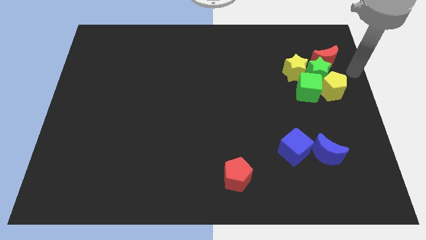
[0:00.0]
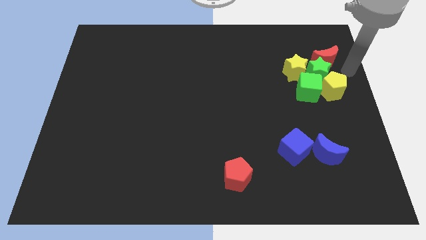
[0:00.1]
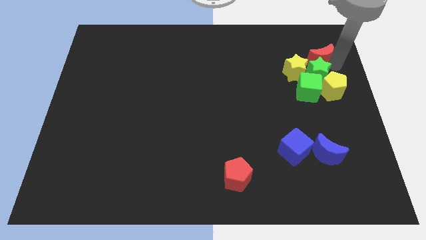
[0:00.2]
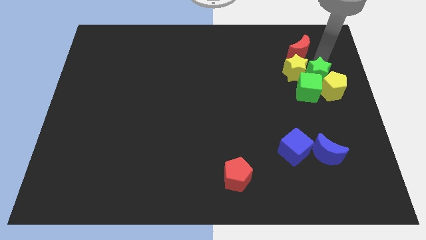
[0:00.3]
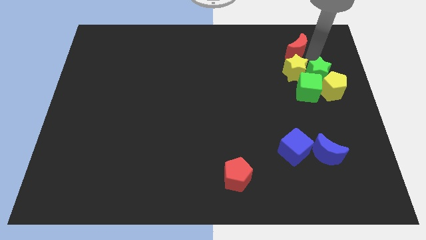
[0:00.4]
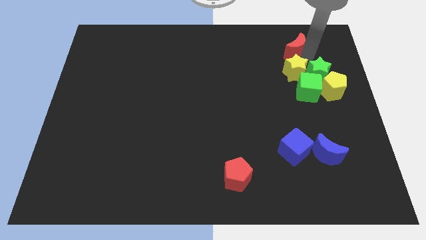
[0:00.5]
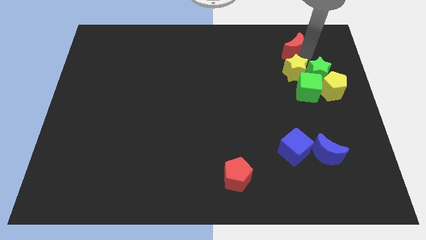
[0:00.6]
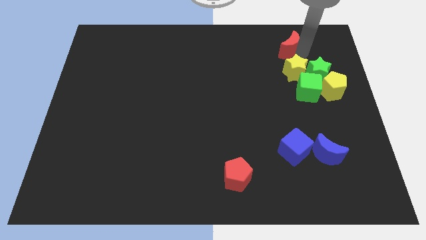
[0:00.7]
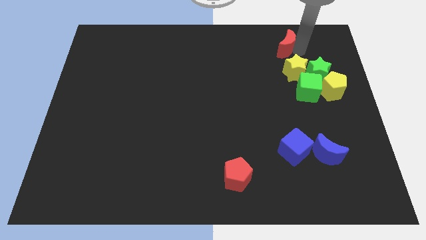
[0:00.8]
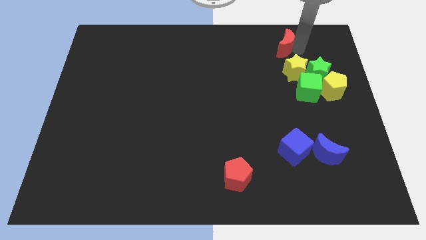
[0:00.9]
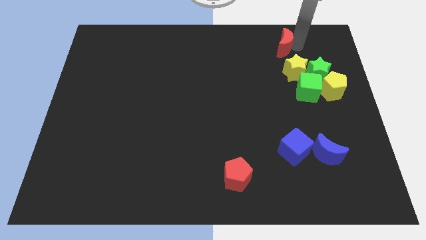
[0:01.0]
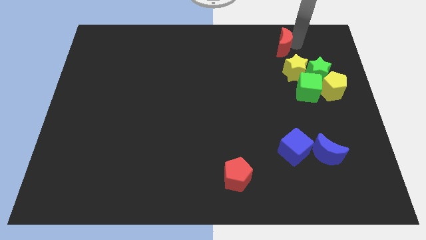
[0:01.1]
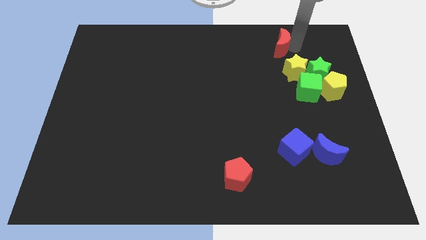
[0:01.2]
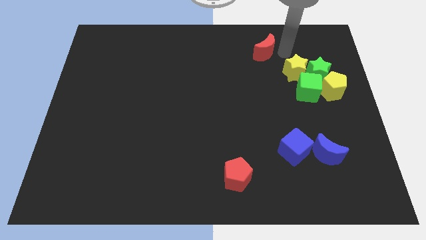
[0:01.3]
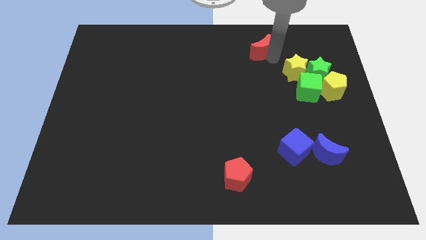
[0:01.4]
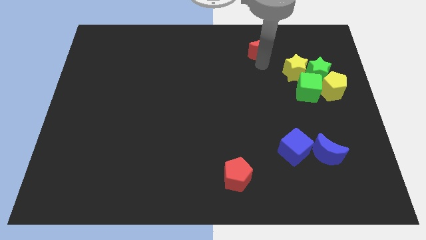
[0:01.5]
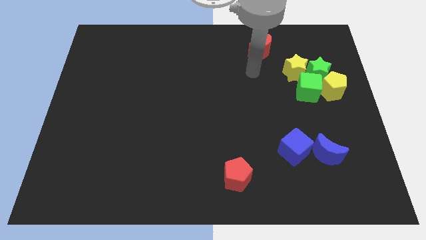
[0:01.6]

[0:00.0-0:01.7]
slide the red crescent away from the green star

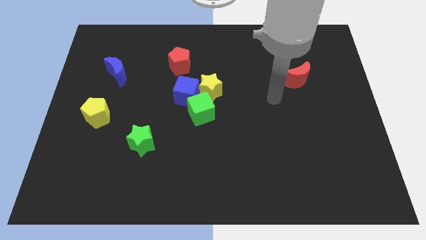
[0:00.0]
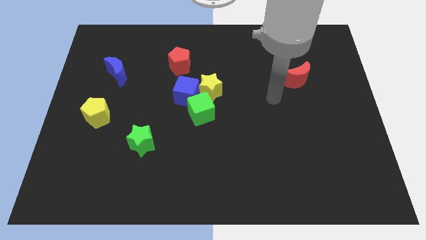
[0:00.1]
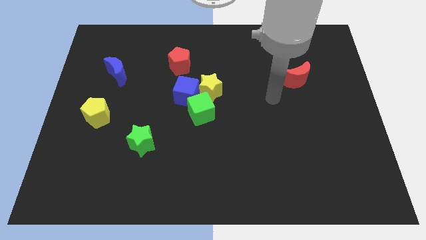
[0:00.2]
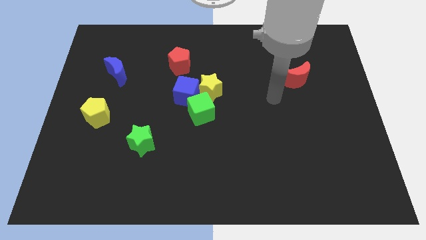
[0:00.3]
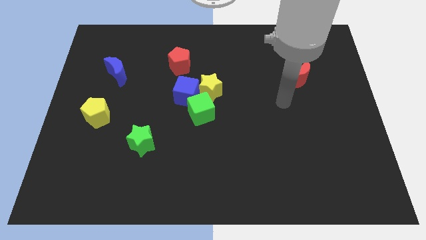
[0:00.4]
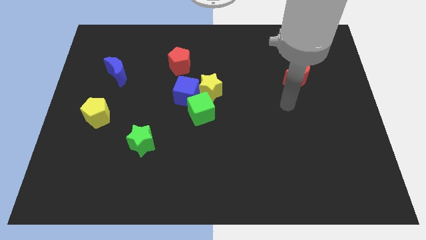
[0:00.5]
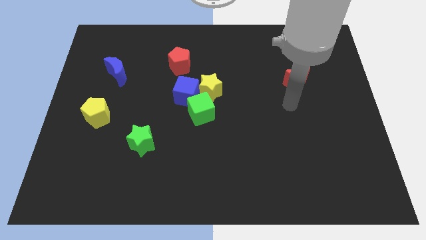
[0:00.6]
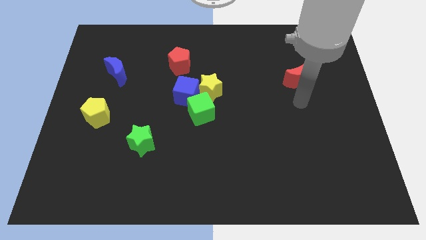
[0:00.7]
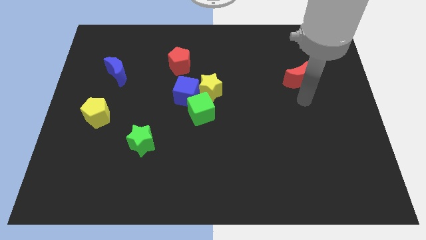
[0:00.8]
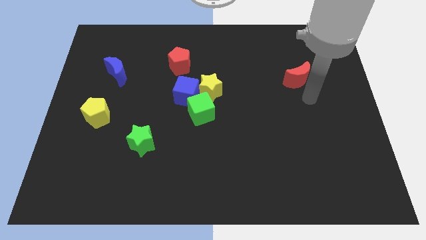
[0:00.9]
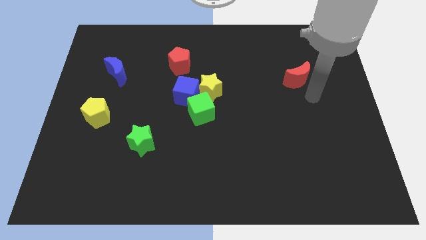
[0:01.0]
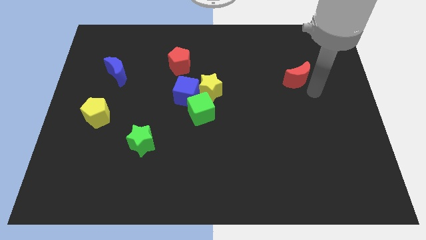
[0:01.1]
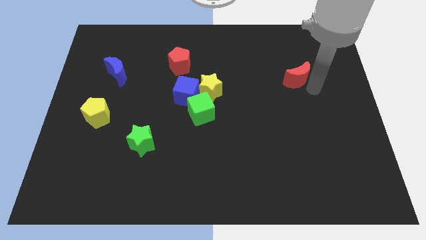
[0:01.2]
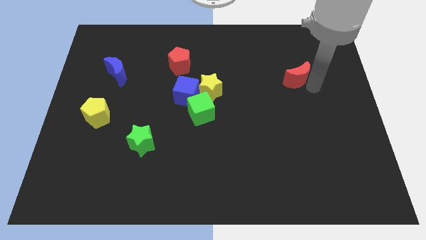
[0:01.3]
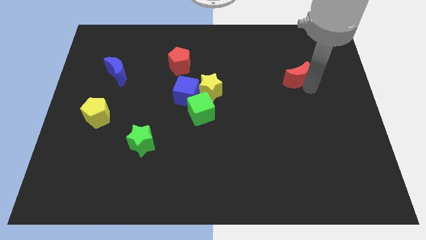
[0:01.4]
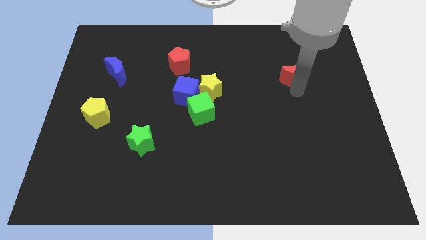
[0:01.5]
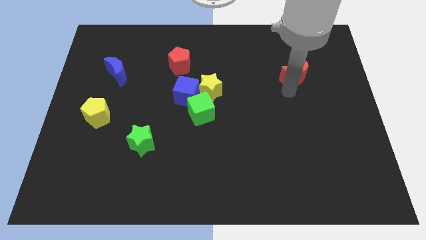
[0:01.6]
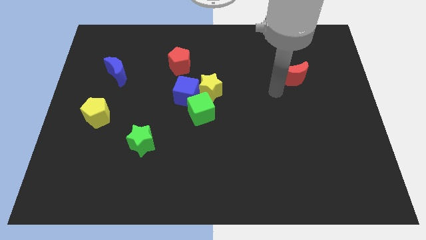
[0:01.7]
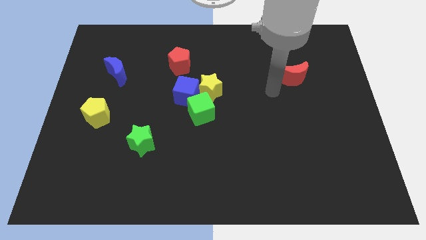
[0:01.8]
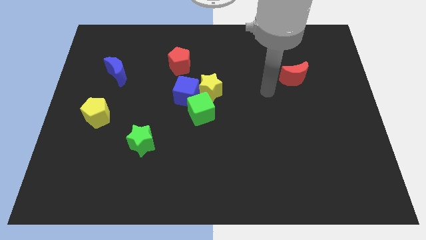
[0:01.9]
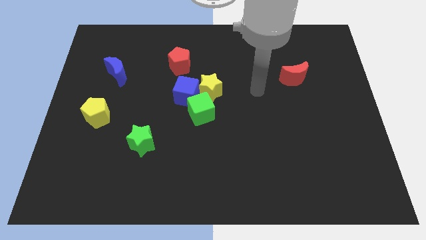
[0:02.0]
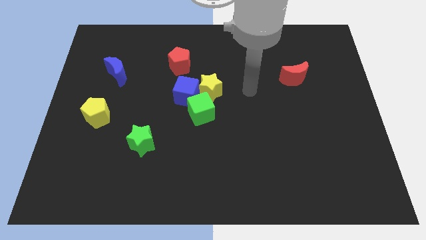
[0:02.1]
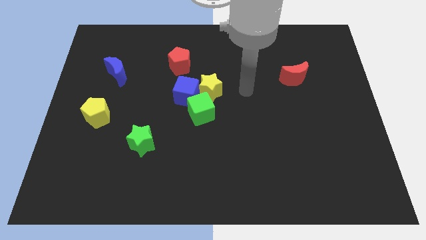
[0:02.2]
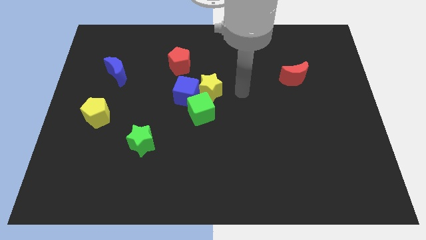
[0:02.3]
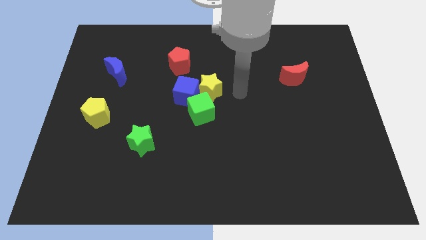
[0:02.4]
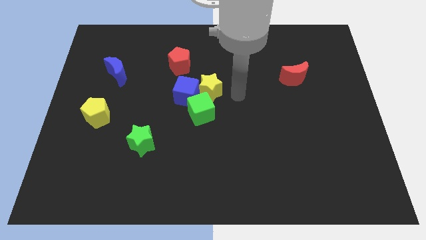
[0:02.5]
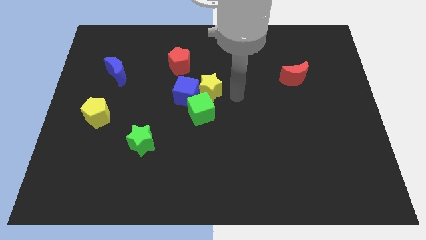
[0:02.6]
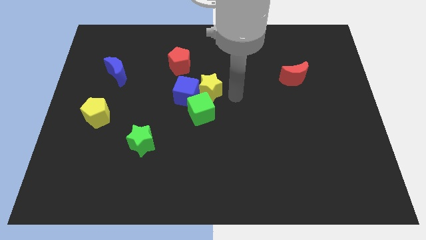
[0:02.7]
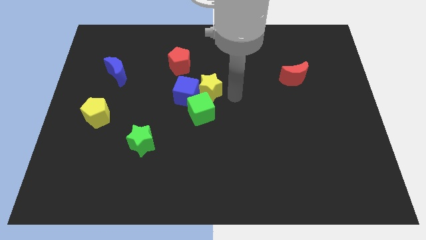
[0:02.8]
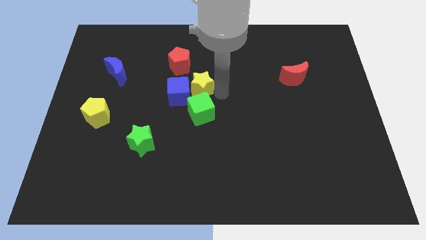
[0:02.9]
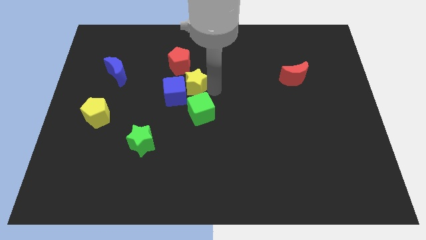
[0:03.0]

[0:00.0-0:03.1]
point your arm towards the bottom right side of the yellow star

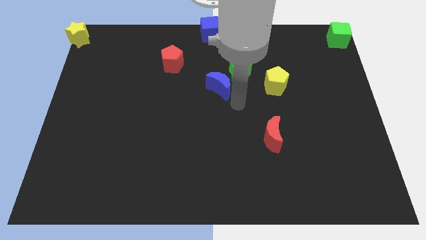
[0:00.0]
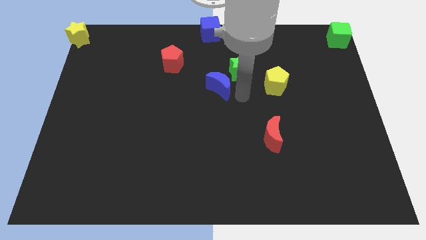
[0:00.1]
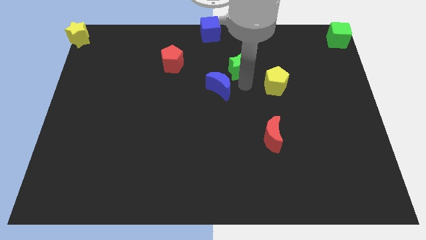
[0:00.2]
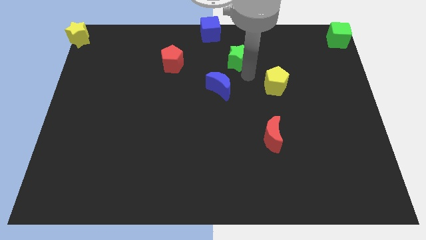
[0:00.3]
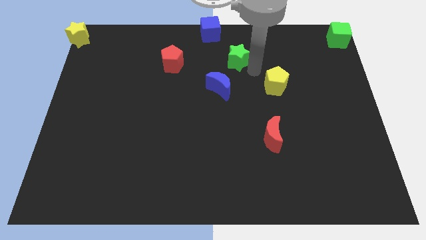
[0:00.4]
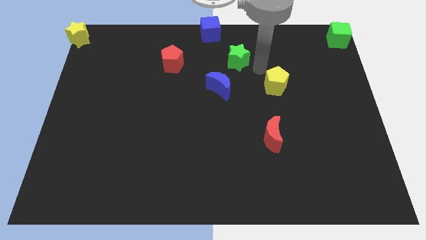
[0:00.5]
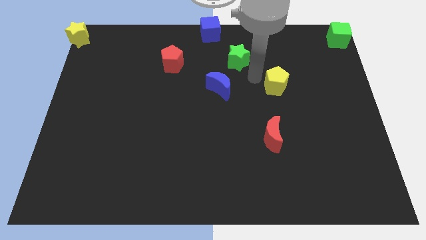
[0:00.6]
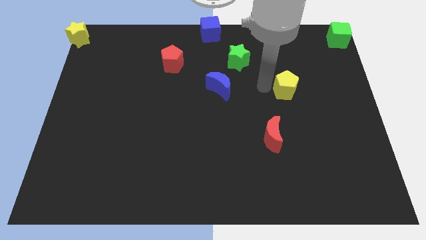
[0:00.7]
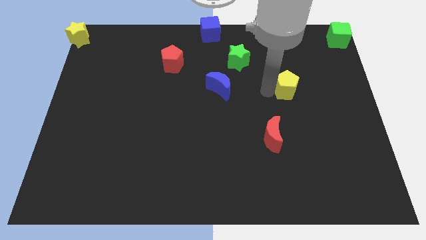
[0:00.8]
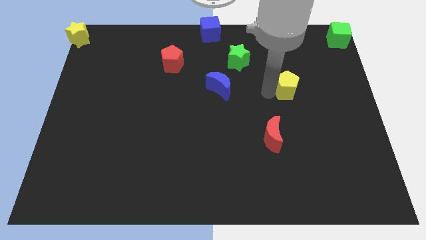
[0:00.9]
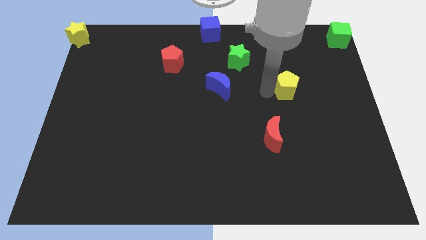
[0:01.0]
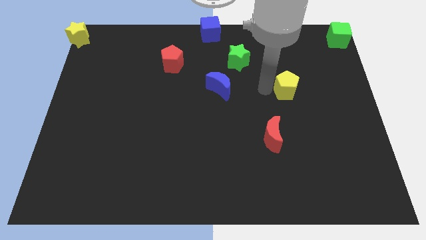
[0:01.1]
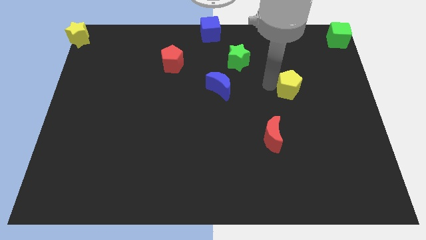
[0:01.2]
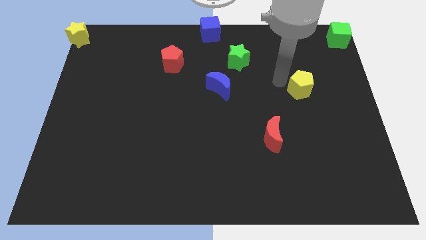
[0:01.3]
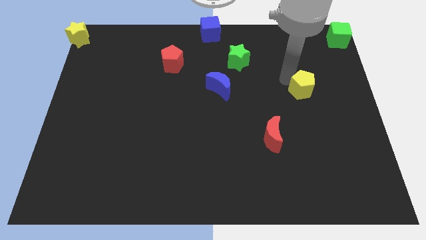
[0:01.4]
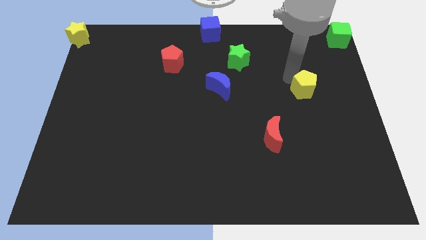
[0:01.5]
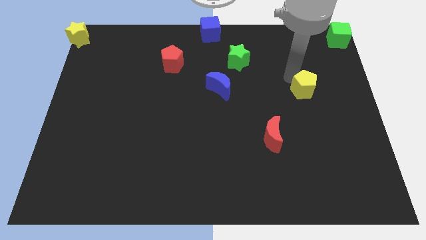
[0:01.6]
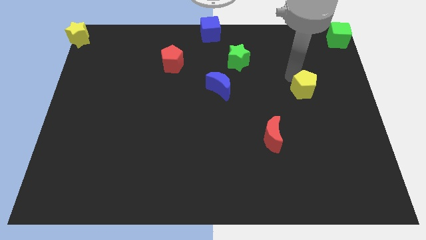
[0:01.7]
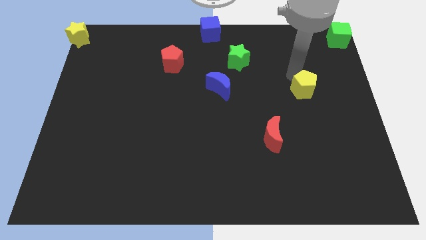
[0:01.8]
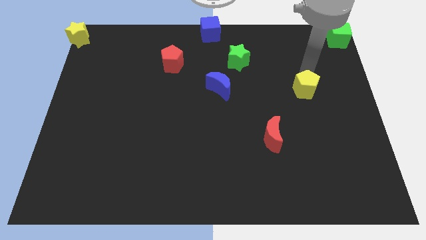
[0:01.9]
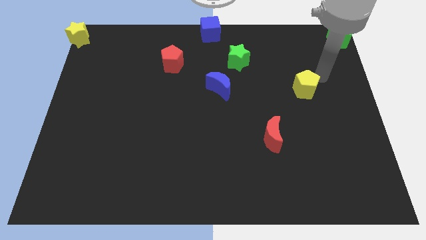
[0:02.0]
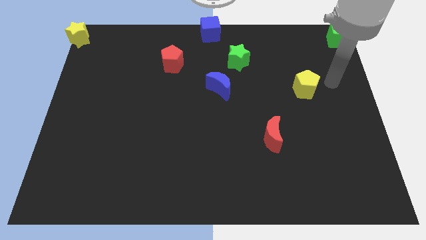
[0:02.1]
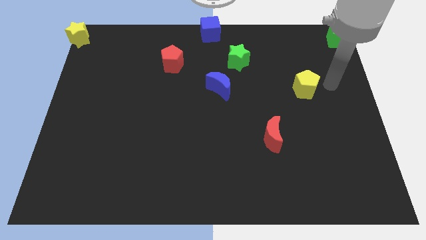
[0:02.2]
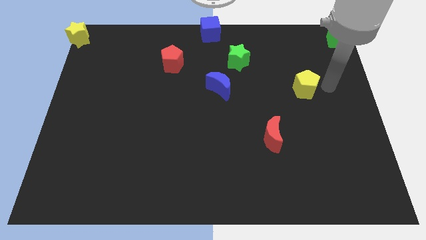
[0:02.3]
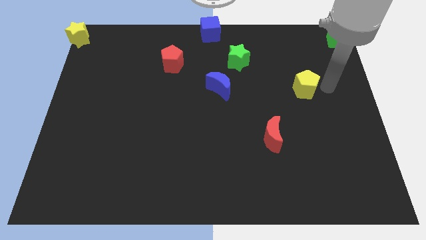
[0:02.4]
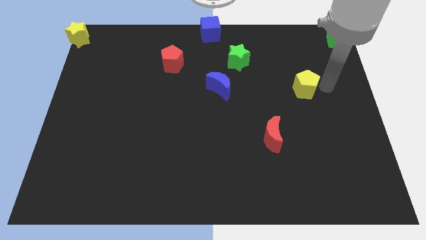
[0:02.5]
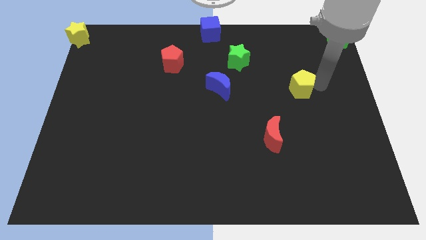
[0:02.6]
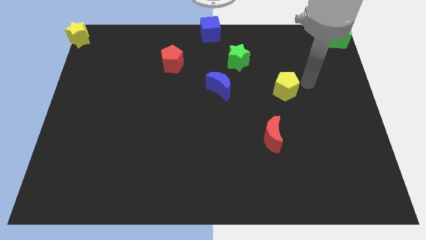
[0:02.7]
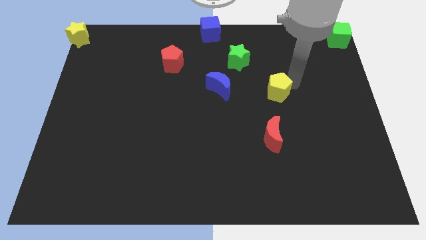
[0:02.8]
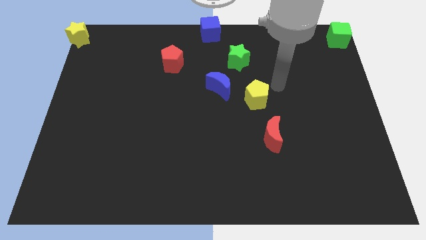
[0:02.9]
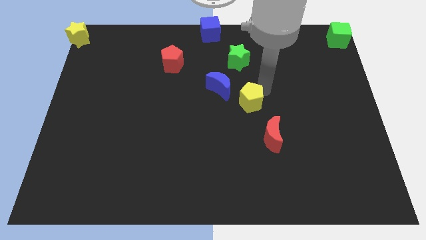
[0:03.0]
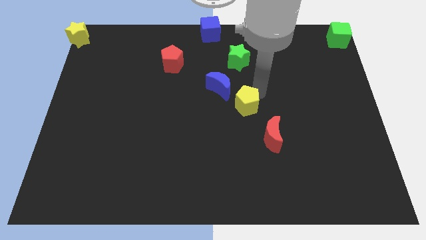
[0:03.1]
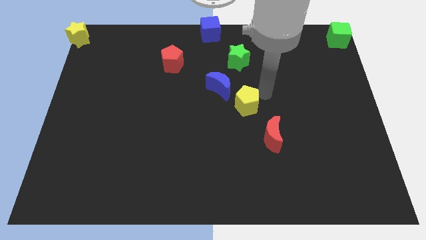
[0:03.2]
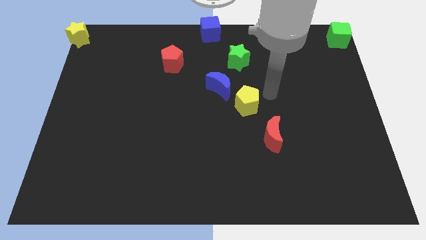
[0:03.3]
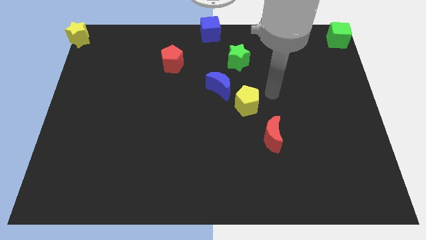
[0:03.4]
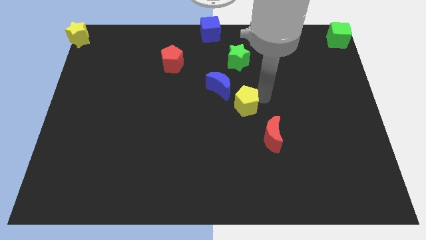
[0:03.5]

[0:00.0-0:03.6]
move th yellow pentagon diagonal above the red moon

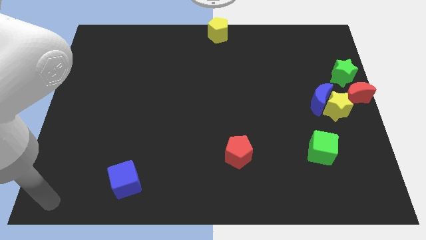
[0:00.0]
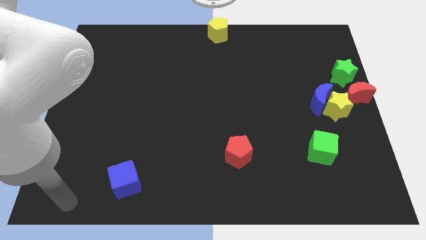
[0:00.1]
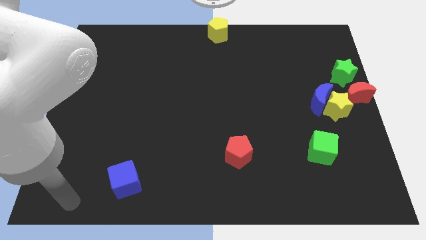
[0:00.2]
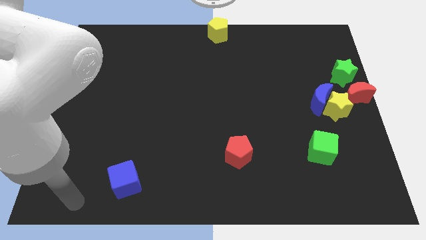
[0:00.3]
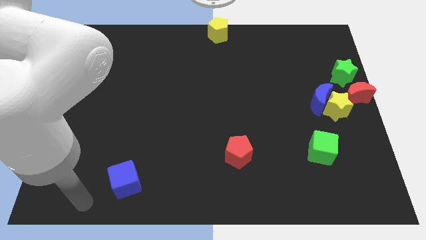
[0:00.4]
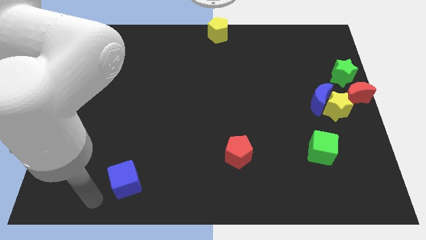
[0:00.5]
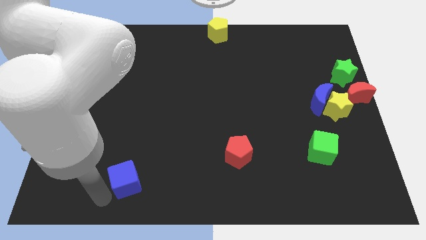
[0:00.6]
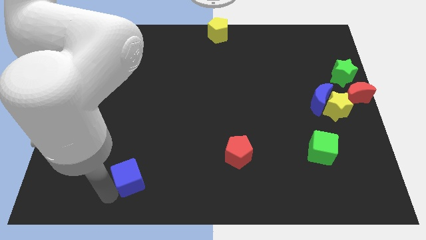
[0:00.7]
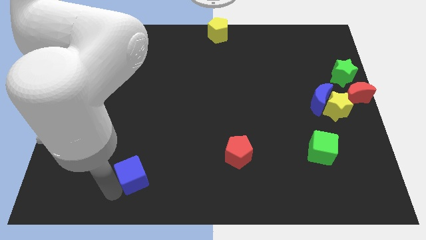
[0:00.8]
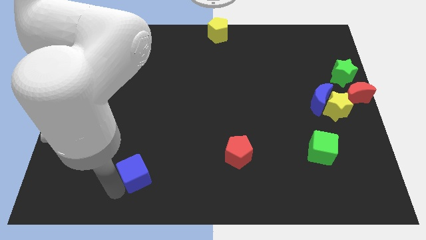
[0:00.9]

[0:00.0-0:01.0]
place yourself close to blue cube
